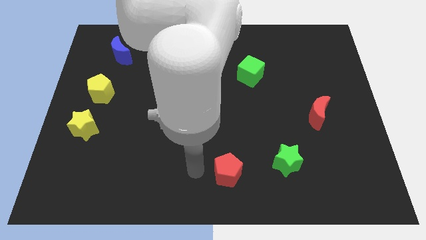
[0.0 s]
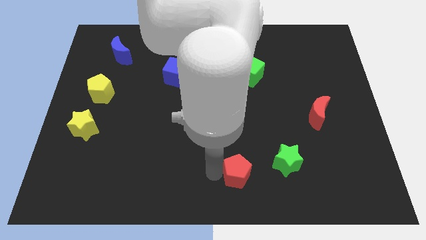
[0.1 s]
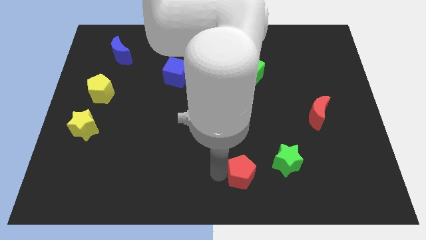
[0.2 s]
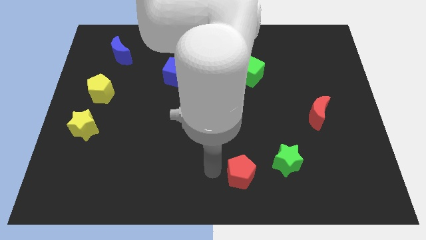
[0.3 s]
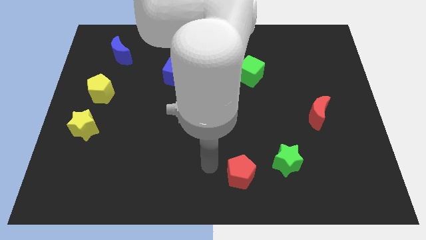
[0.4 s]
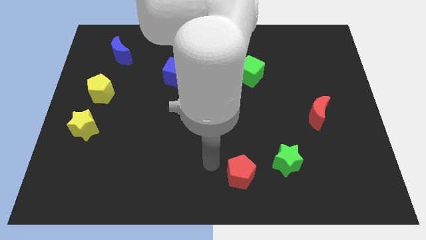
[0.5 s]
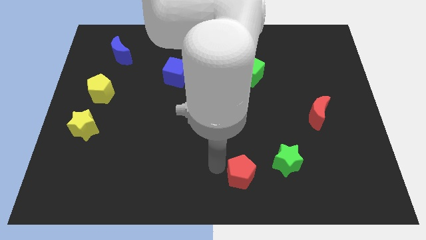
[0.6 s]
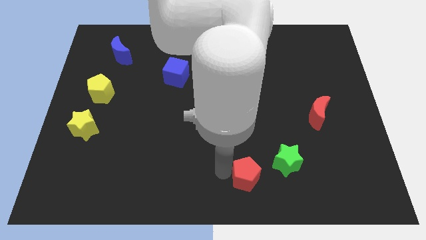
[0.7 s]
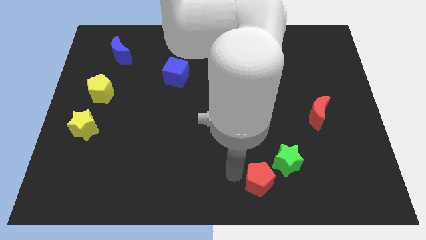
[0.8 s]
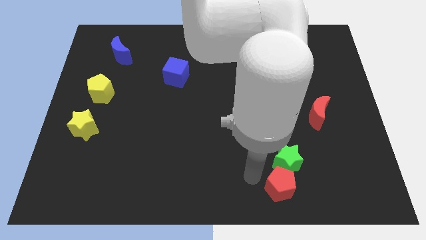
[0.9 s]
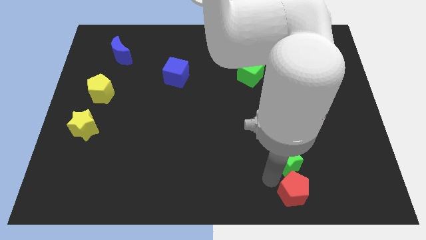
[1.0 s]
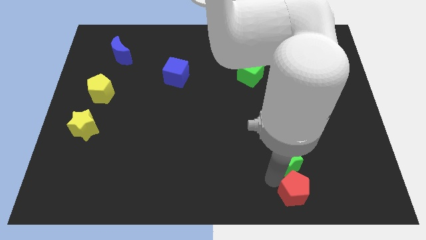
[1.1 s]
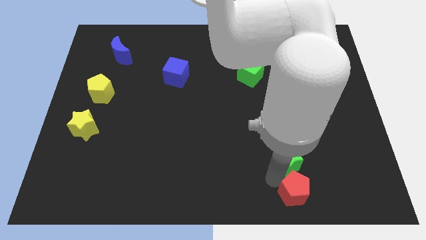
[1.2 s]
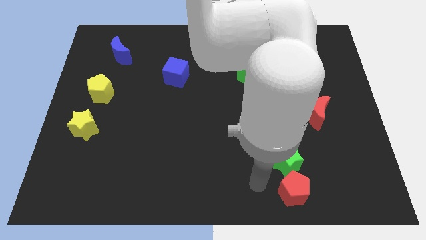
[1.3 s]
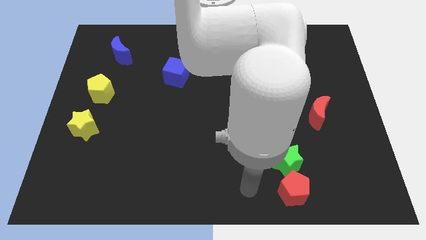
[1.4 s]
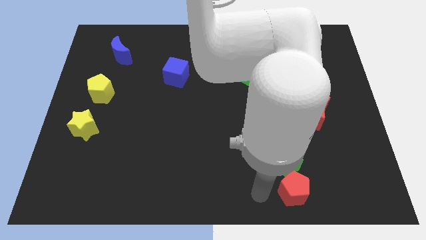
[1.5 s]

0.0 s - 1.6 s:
place the red pentagon at the bottom side of the green star

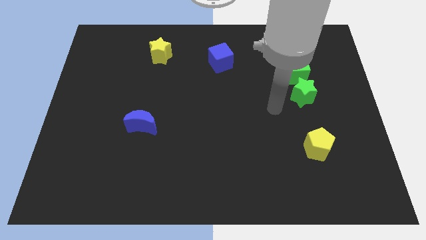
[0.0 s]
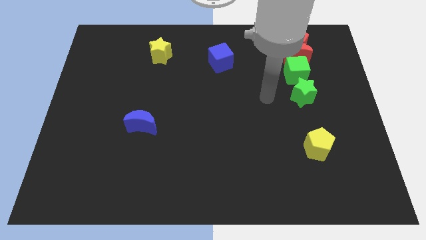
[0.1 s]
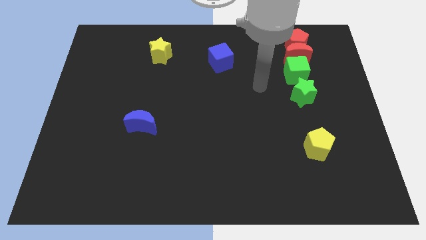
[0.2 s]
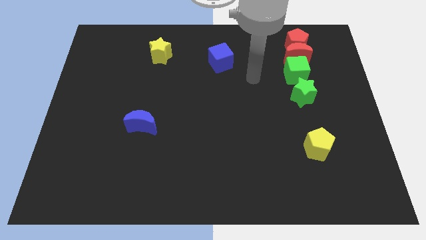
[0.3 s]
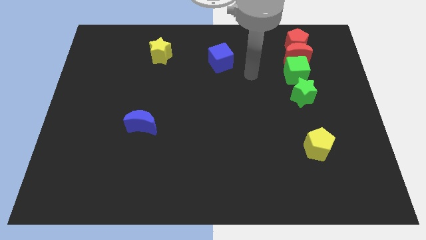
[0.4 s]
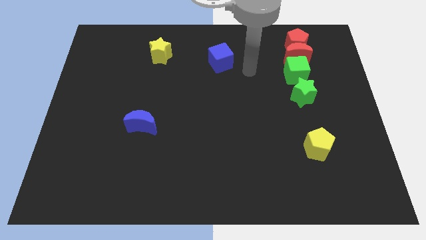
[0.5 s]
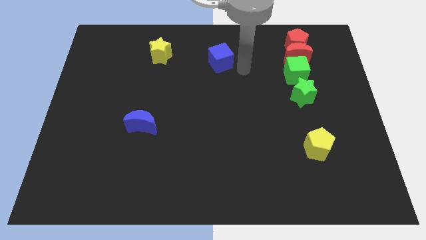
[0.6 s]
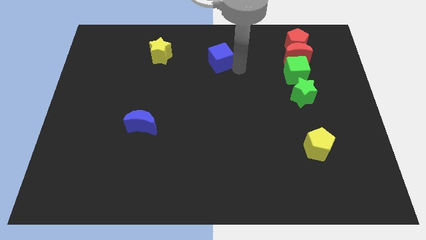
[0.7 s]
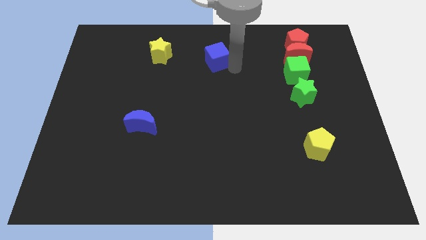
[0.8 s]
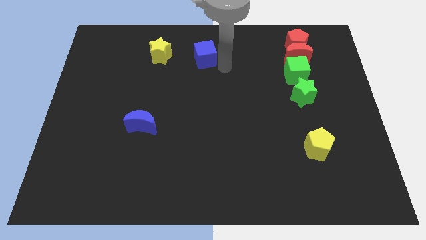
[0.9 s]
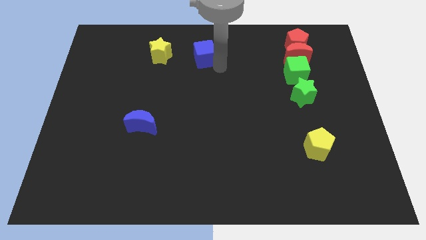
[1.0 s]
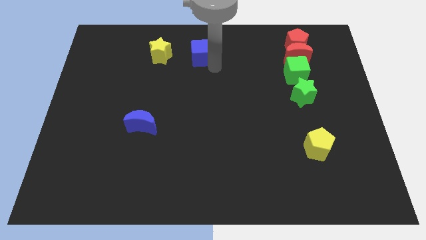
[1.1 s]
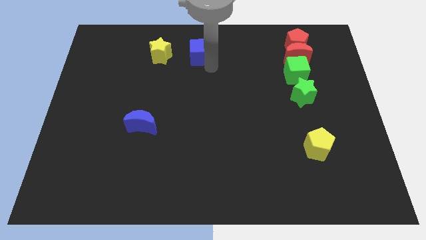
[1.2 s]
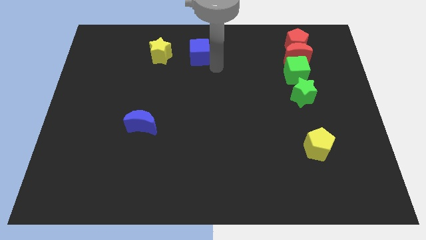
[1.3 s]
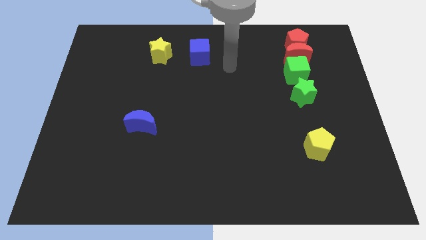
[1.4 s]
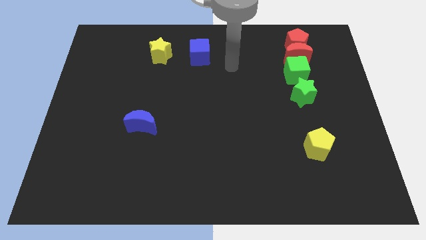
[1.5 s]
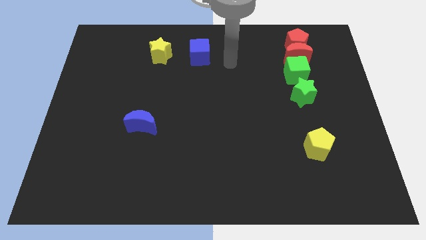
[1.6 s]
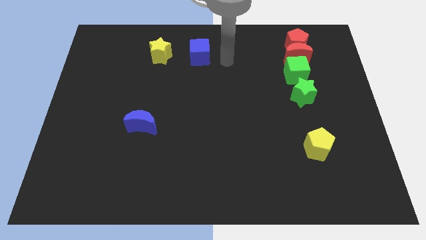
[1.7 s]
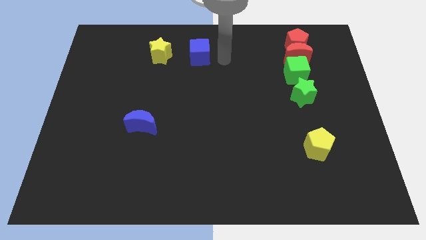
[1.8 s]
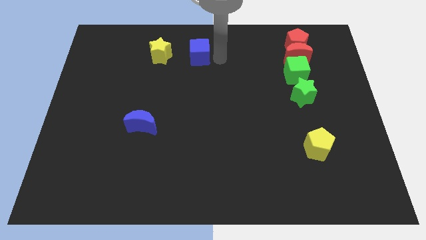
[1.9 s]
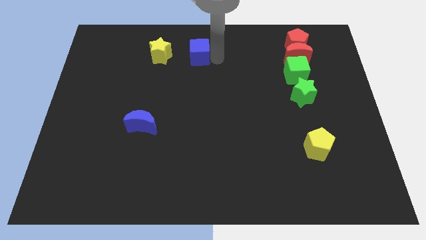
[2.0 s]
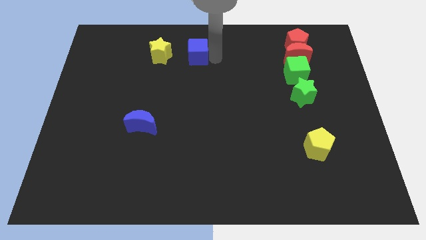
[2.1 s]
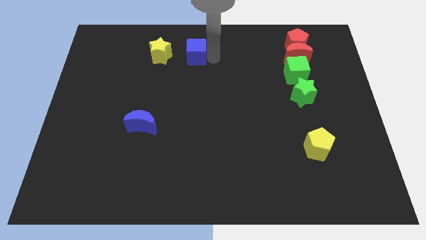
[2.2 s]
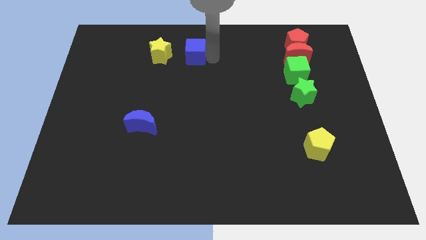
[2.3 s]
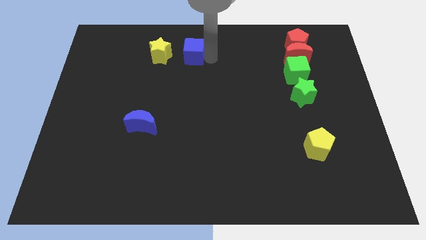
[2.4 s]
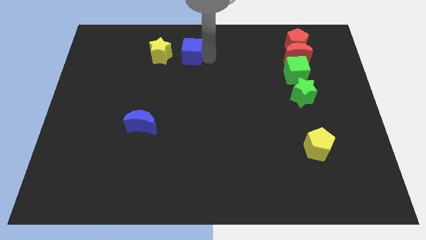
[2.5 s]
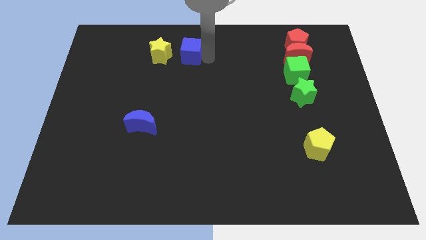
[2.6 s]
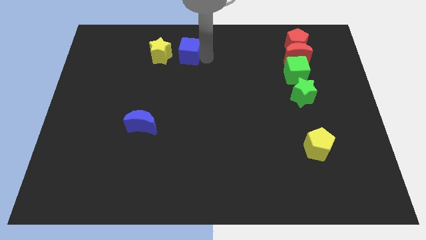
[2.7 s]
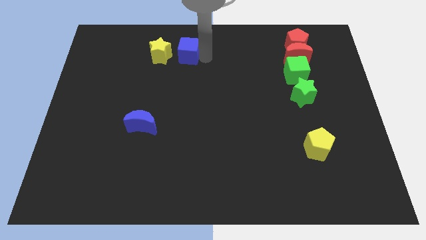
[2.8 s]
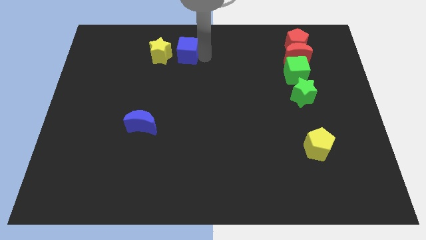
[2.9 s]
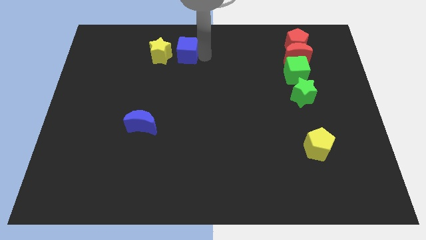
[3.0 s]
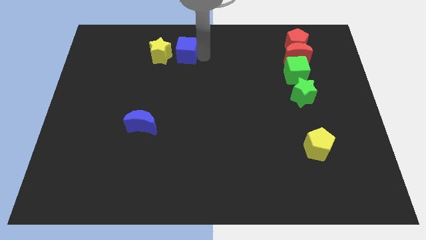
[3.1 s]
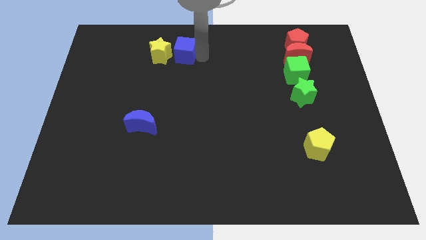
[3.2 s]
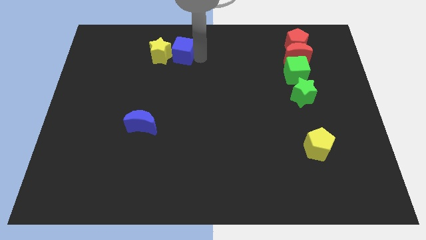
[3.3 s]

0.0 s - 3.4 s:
slide the blue cube close to the right side of the yellow star

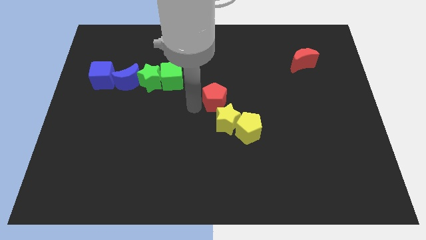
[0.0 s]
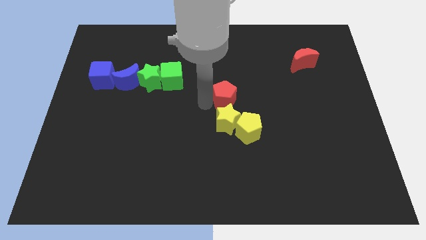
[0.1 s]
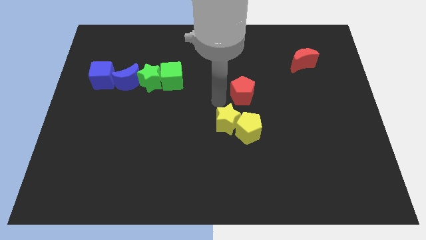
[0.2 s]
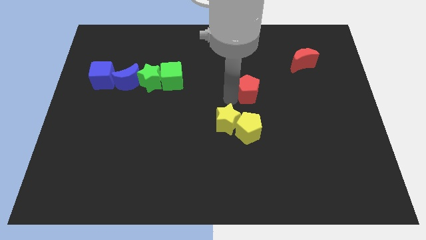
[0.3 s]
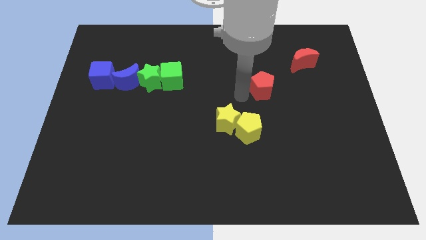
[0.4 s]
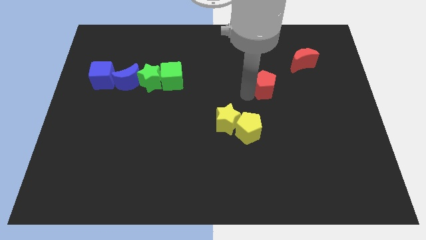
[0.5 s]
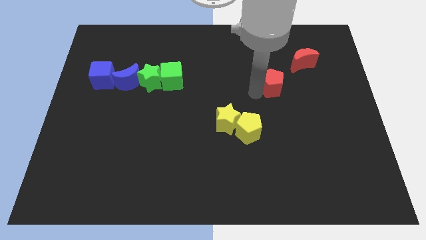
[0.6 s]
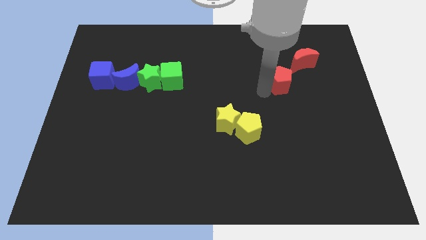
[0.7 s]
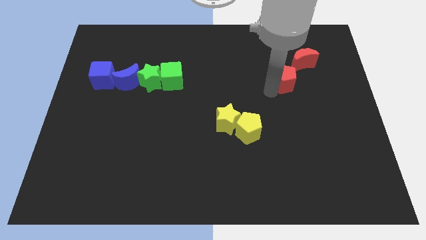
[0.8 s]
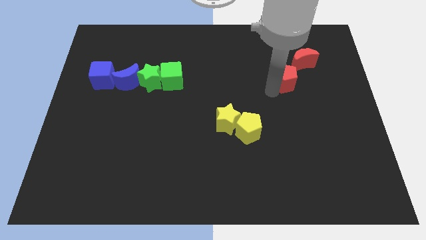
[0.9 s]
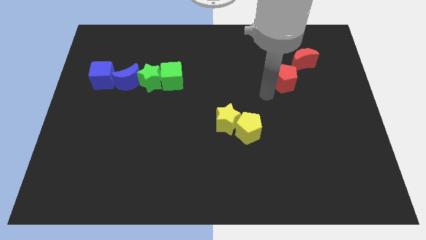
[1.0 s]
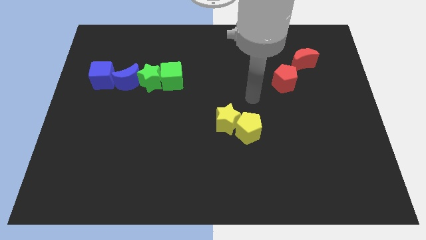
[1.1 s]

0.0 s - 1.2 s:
join the red pentagon with the red crescent

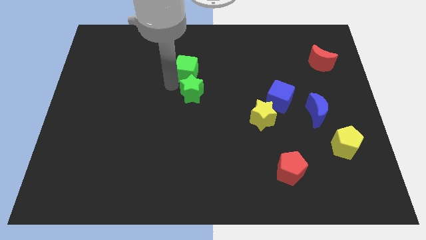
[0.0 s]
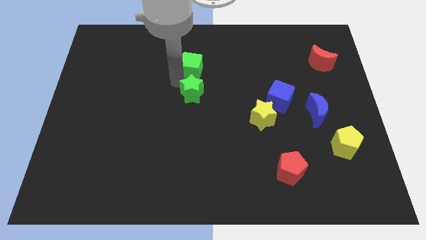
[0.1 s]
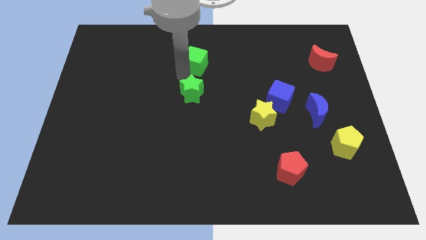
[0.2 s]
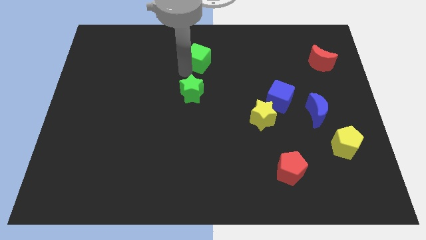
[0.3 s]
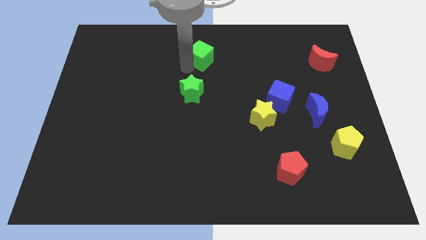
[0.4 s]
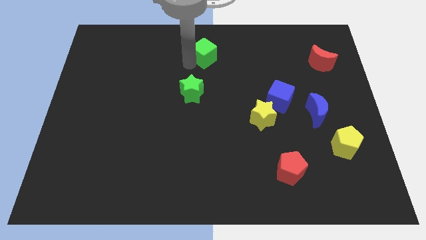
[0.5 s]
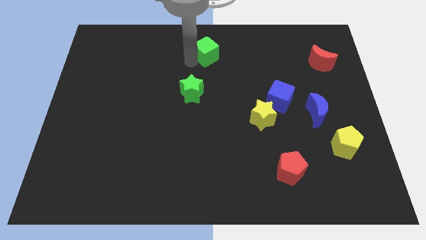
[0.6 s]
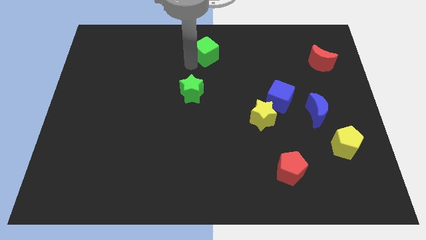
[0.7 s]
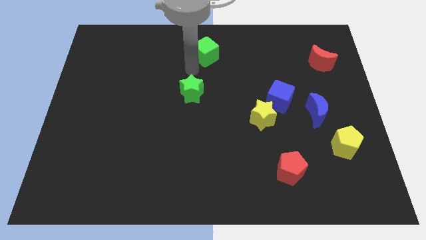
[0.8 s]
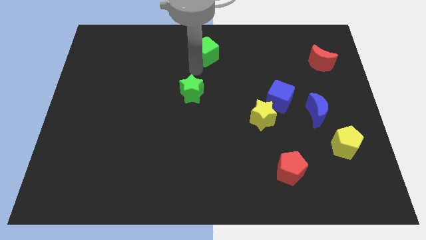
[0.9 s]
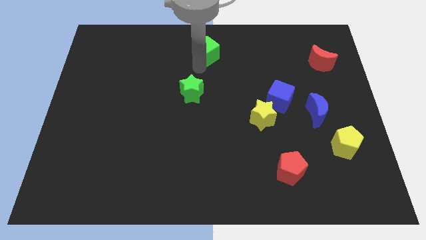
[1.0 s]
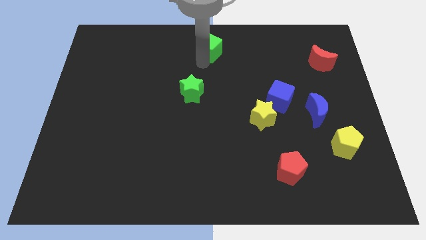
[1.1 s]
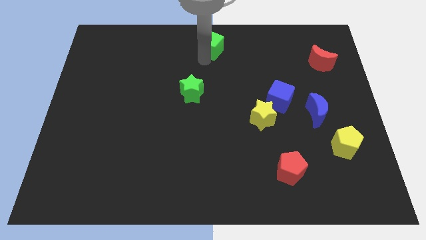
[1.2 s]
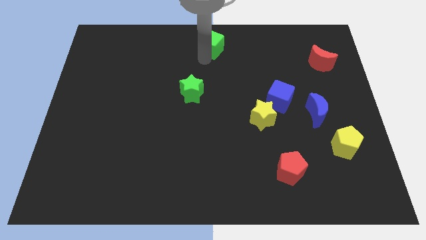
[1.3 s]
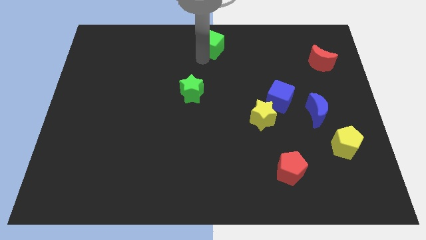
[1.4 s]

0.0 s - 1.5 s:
move green cube to the top center of the board

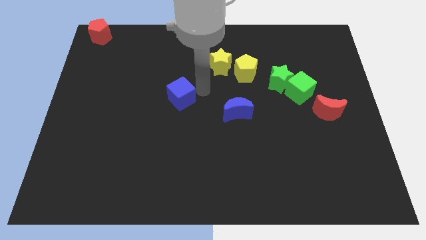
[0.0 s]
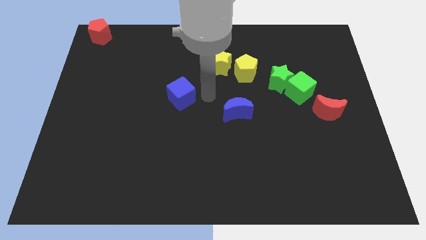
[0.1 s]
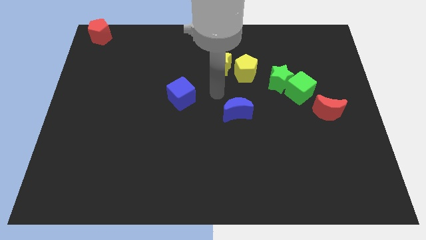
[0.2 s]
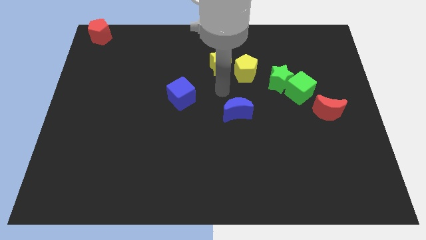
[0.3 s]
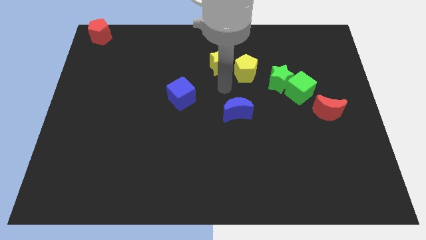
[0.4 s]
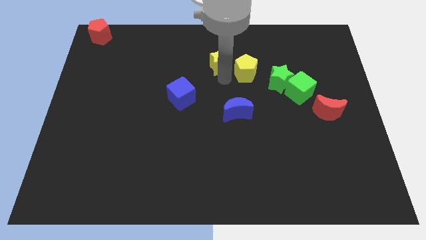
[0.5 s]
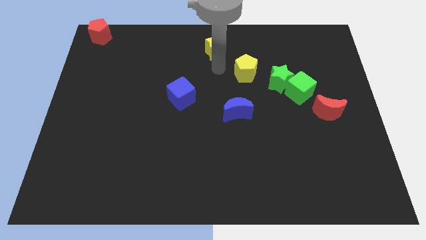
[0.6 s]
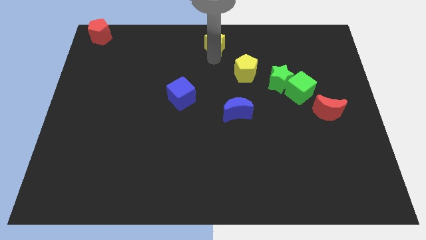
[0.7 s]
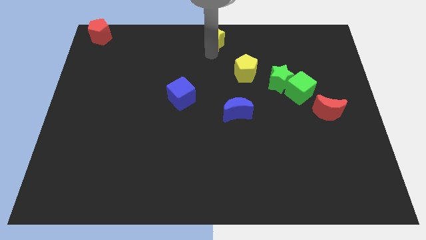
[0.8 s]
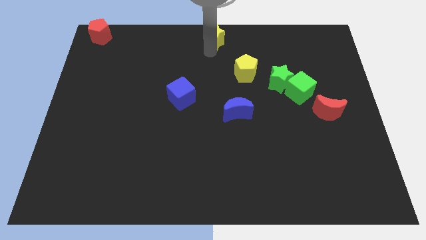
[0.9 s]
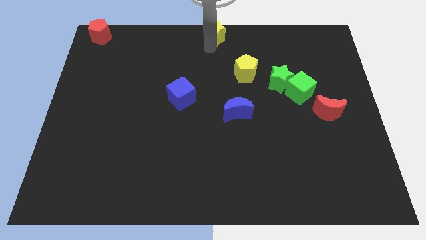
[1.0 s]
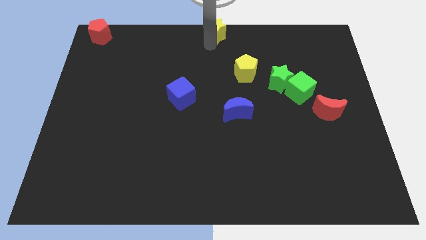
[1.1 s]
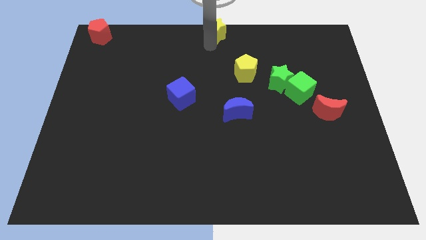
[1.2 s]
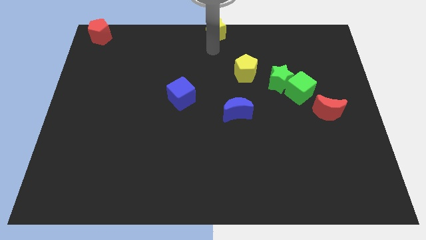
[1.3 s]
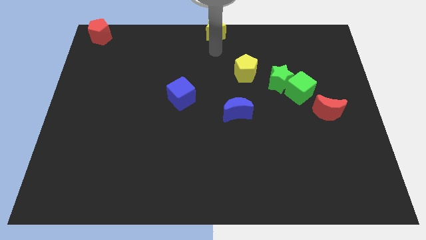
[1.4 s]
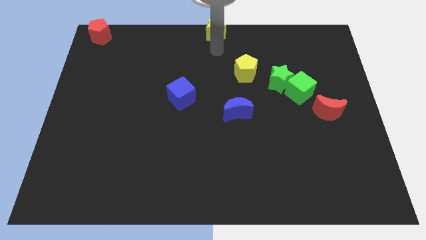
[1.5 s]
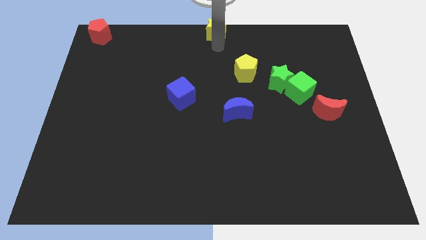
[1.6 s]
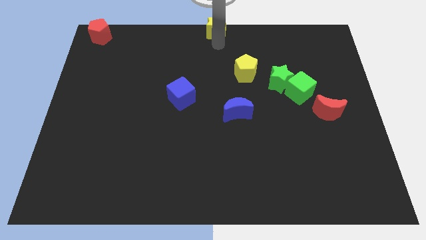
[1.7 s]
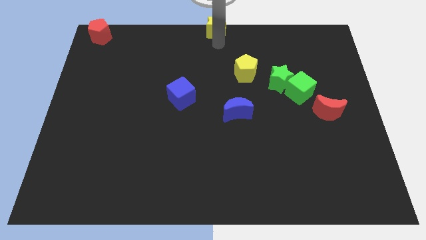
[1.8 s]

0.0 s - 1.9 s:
place the yellow star on the top middle of the board
